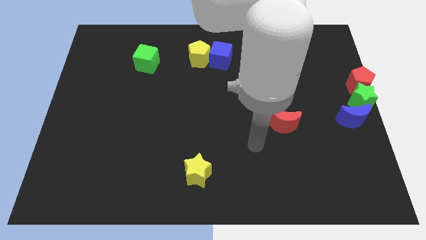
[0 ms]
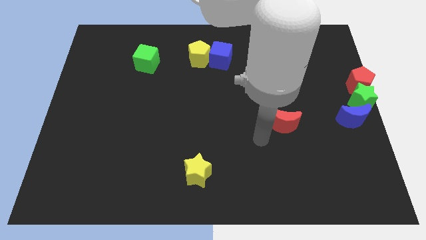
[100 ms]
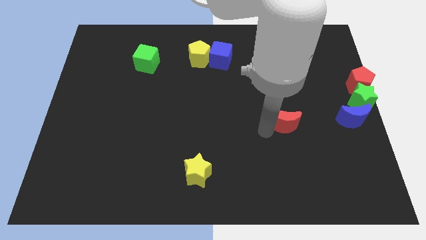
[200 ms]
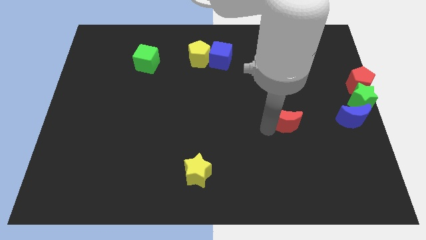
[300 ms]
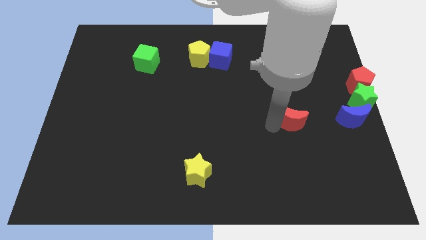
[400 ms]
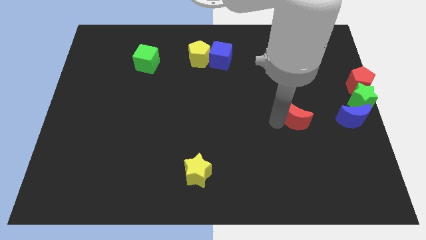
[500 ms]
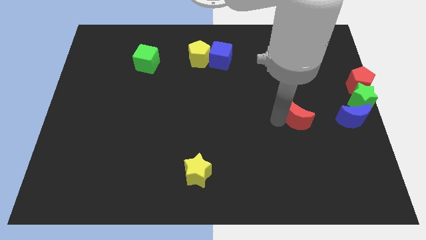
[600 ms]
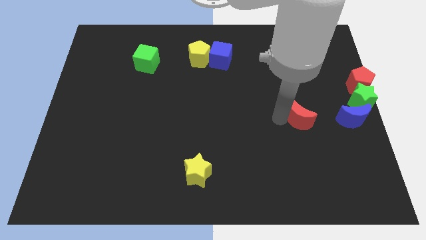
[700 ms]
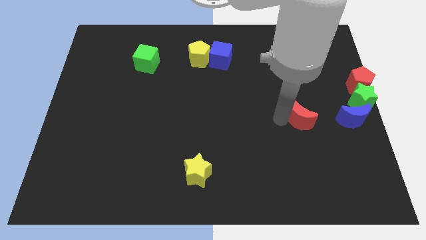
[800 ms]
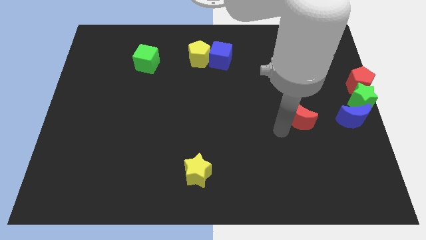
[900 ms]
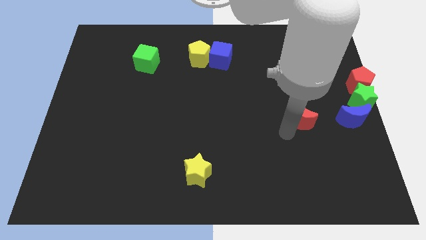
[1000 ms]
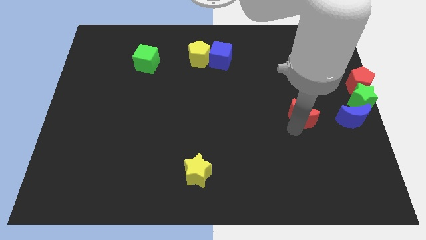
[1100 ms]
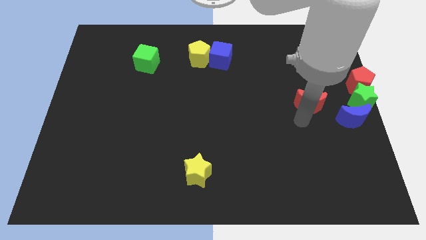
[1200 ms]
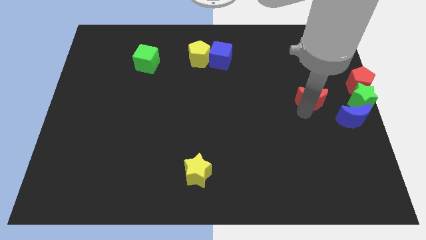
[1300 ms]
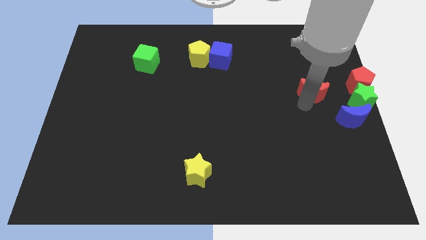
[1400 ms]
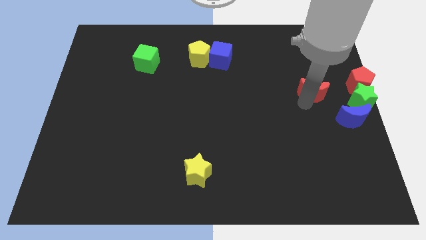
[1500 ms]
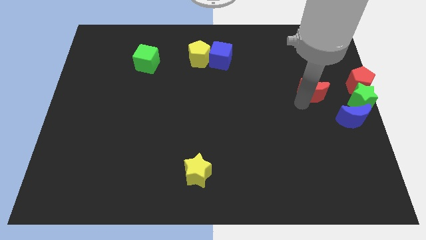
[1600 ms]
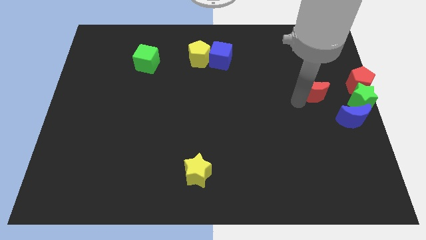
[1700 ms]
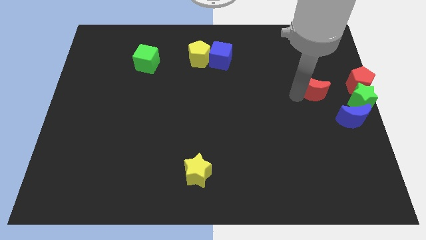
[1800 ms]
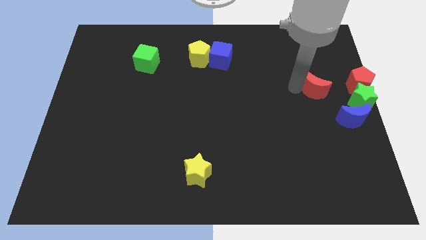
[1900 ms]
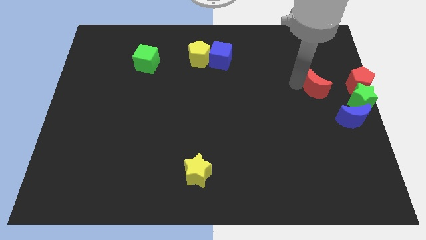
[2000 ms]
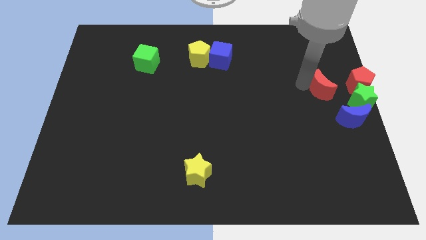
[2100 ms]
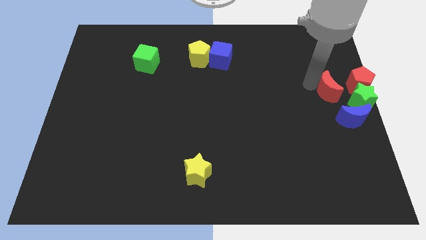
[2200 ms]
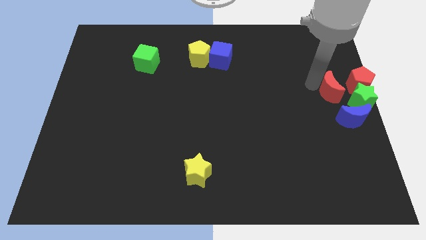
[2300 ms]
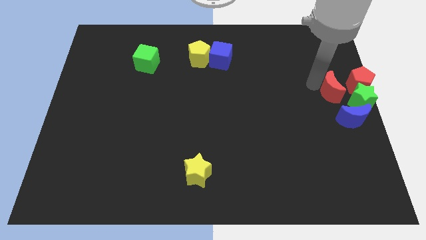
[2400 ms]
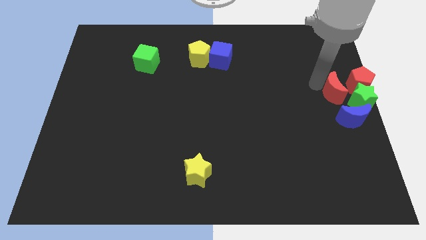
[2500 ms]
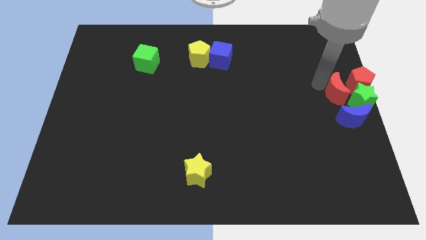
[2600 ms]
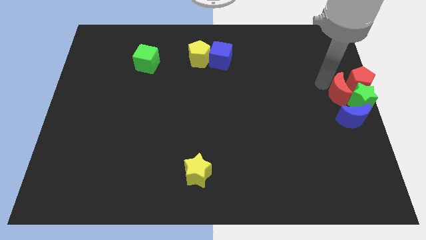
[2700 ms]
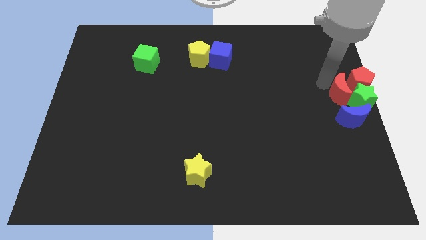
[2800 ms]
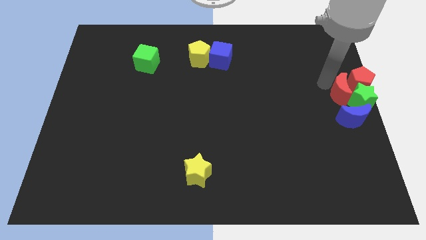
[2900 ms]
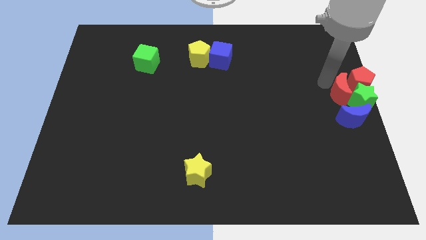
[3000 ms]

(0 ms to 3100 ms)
move the red crescent into the left side of the group of blocks

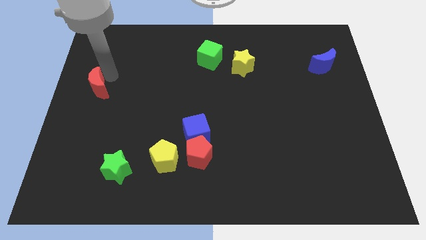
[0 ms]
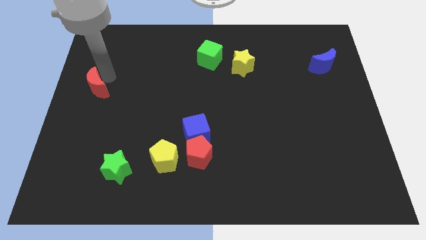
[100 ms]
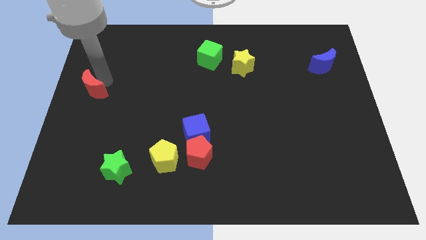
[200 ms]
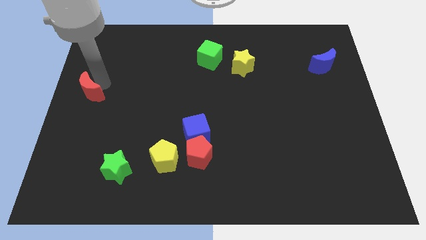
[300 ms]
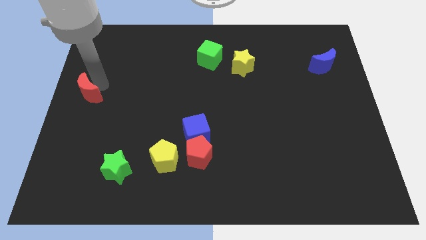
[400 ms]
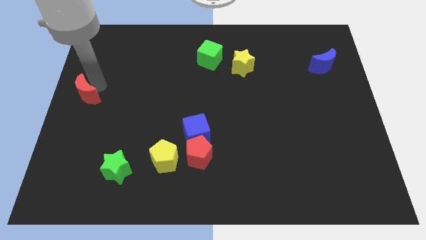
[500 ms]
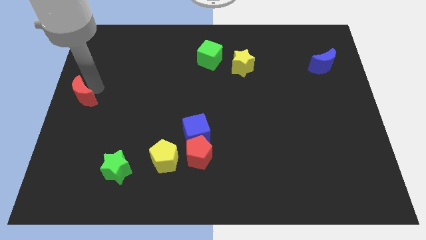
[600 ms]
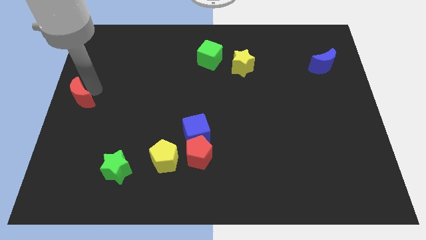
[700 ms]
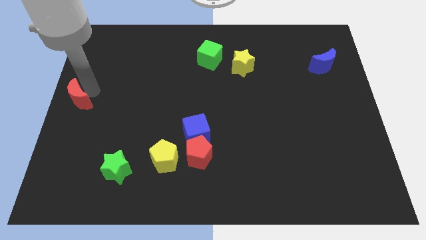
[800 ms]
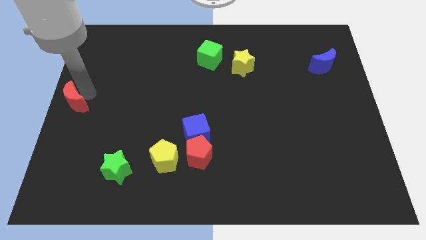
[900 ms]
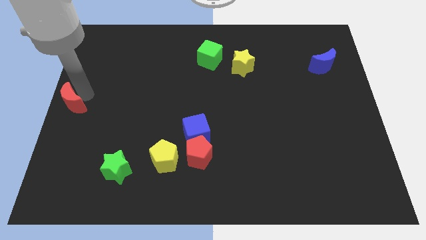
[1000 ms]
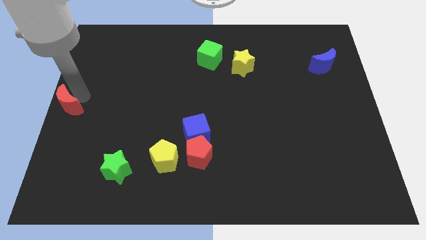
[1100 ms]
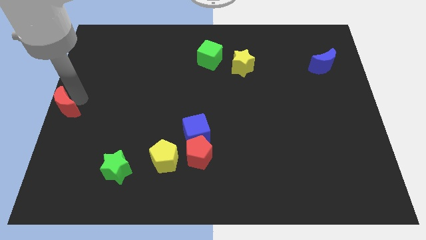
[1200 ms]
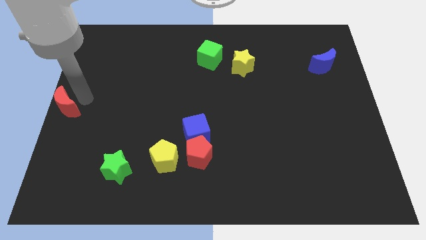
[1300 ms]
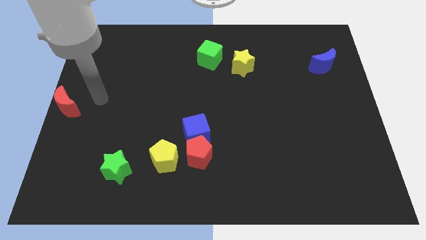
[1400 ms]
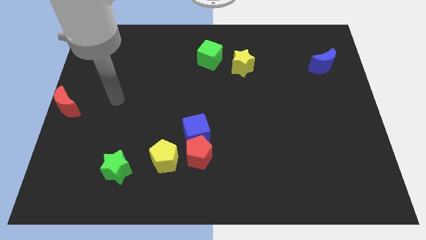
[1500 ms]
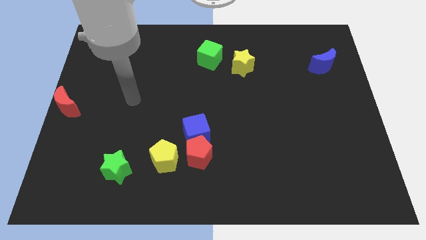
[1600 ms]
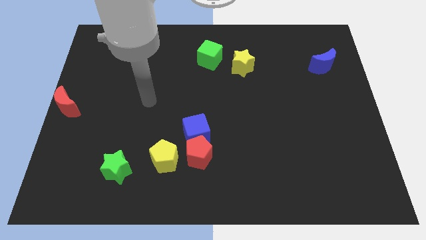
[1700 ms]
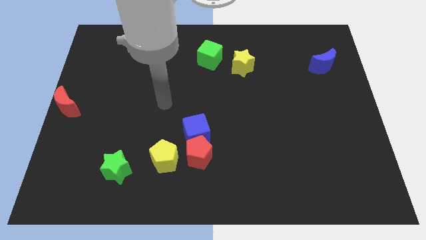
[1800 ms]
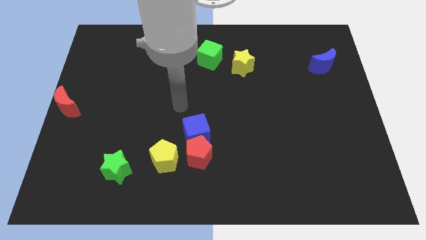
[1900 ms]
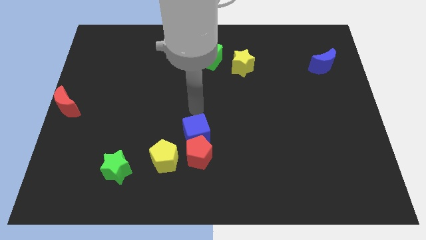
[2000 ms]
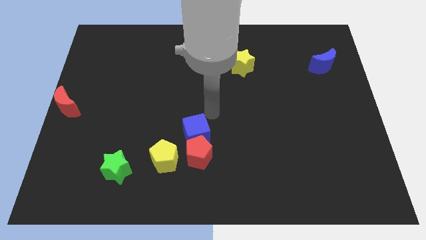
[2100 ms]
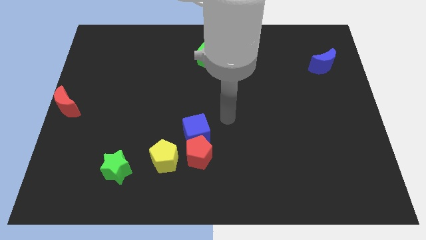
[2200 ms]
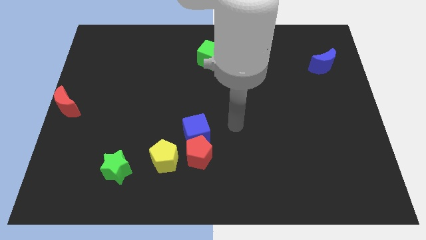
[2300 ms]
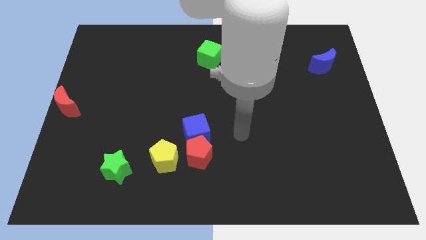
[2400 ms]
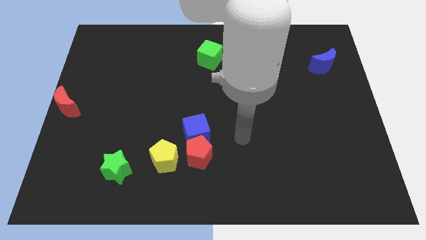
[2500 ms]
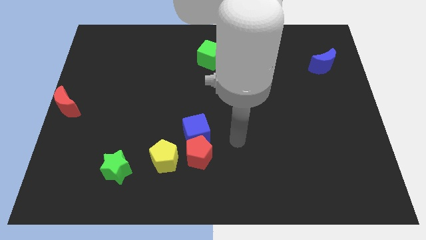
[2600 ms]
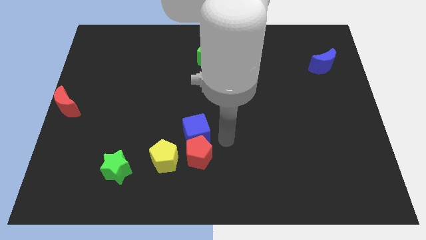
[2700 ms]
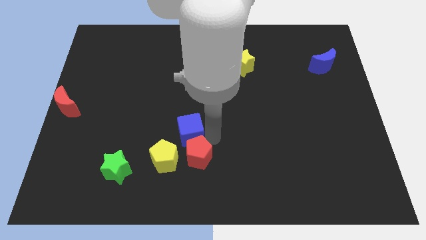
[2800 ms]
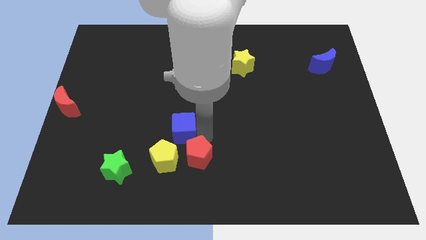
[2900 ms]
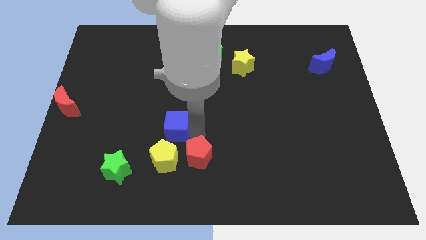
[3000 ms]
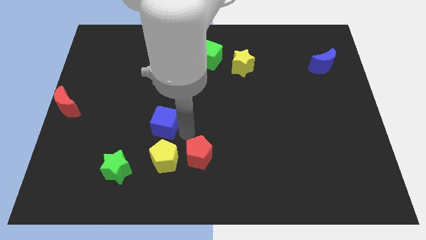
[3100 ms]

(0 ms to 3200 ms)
separate the blue cube from the red pentagon

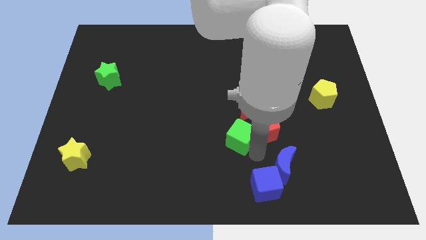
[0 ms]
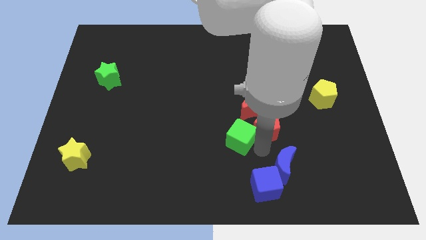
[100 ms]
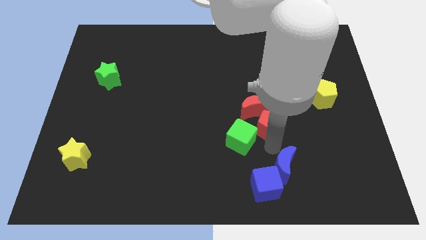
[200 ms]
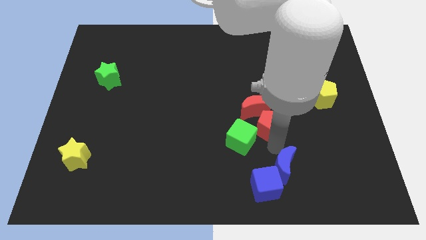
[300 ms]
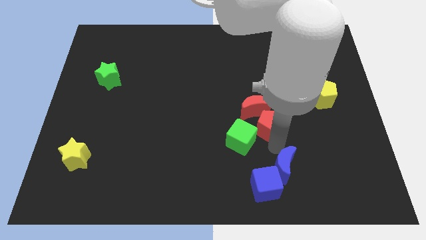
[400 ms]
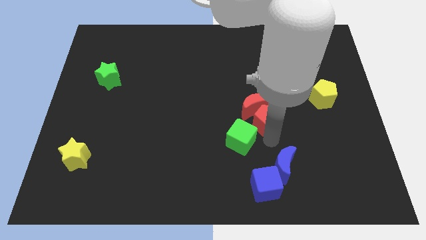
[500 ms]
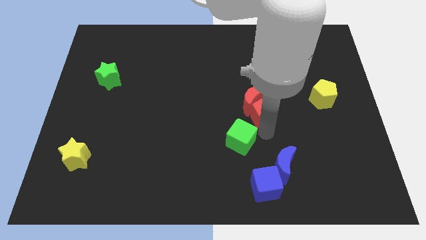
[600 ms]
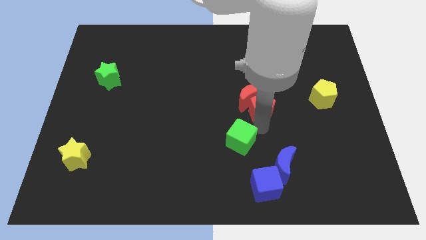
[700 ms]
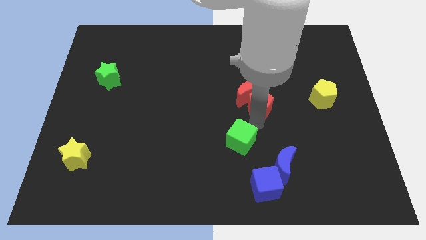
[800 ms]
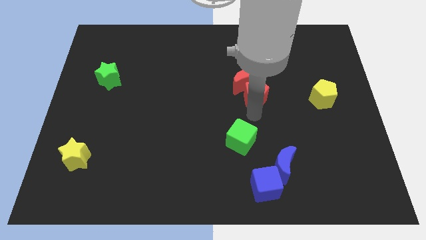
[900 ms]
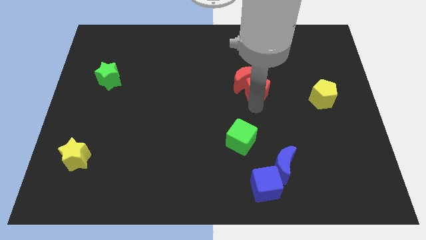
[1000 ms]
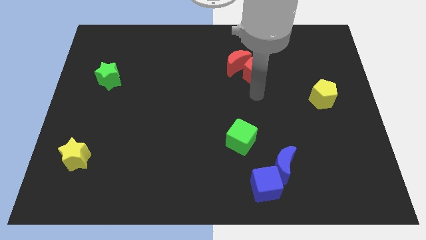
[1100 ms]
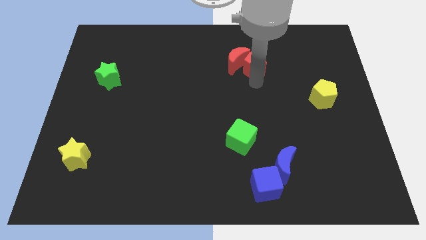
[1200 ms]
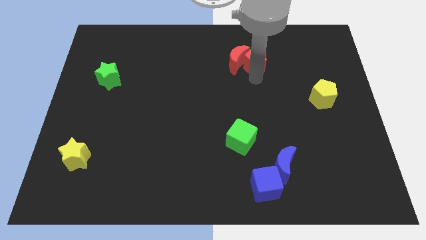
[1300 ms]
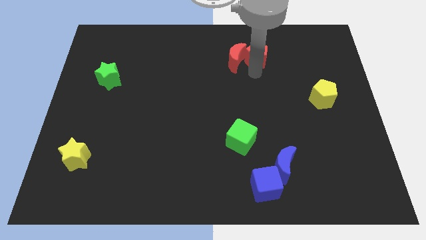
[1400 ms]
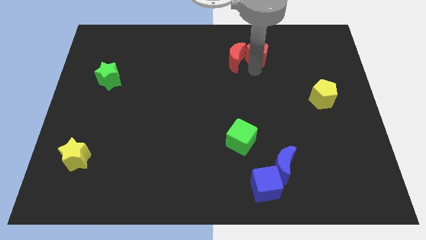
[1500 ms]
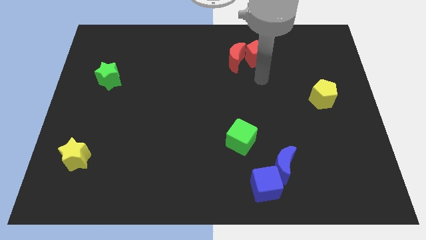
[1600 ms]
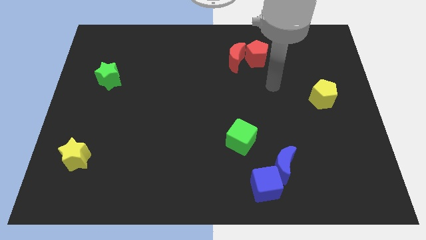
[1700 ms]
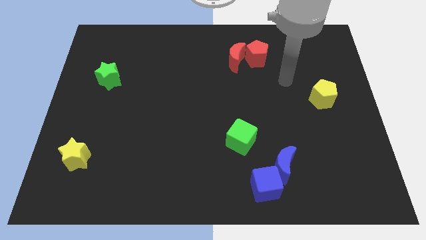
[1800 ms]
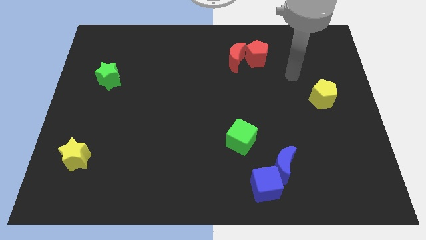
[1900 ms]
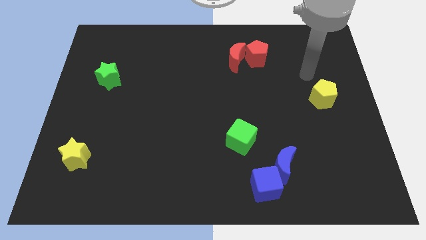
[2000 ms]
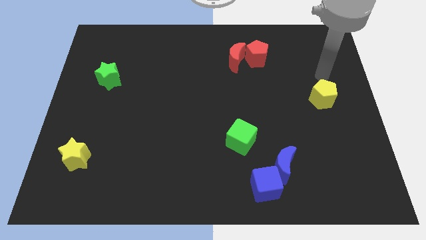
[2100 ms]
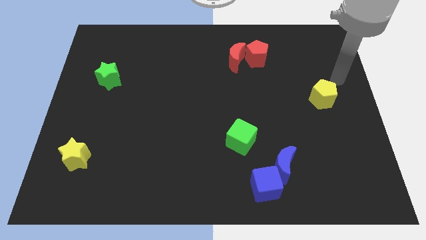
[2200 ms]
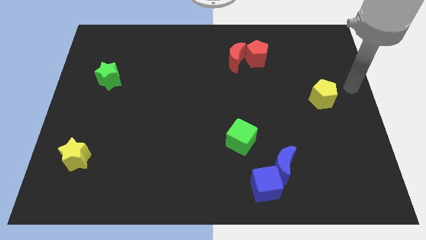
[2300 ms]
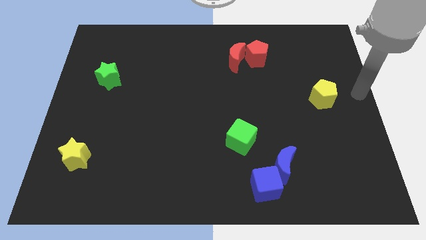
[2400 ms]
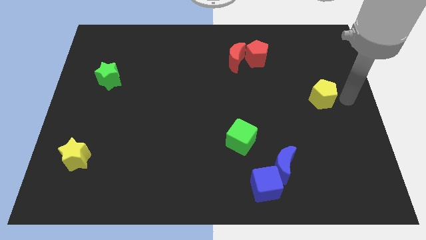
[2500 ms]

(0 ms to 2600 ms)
separate red blocks from green cube

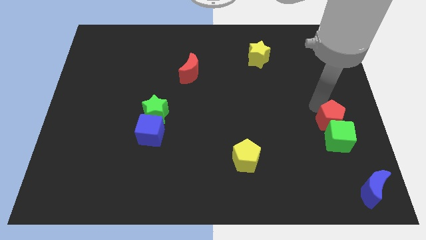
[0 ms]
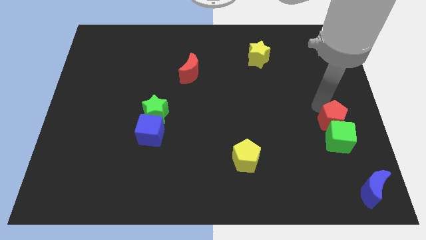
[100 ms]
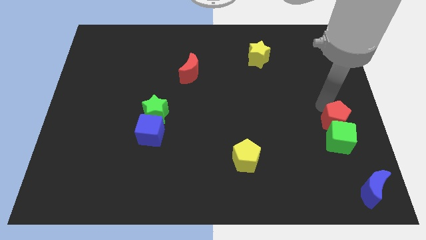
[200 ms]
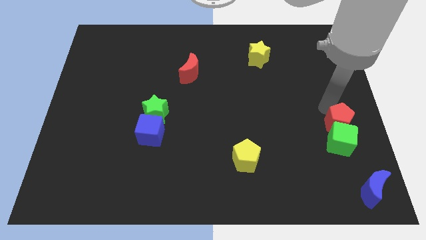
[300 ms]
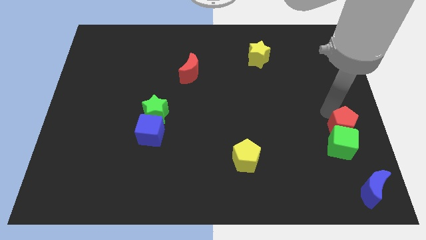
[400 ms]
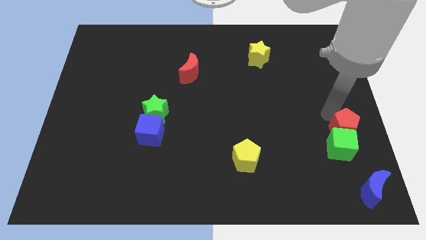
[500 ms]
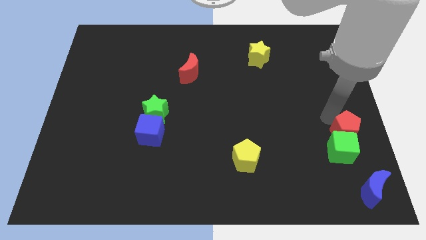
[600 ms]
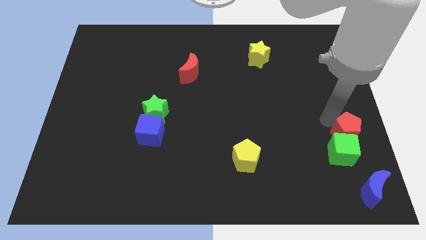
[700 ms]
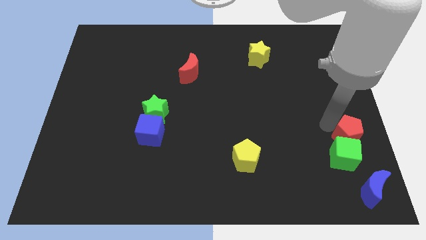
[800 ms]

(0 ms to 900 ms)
move red pentagon and green cube slightly down
